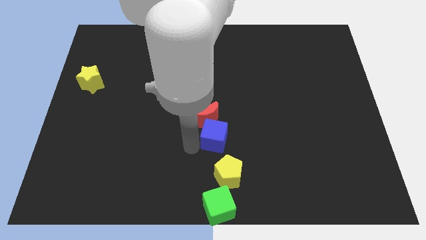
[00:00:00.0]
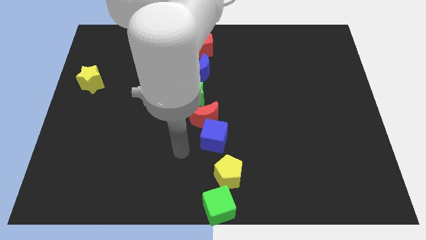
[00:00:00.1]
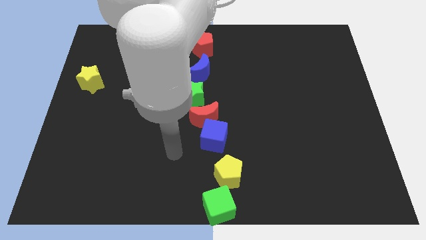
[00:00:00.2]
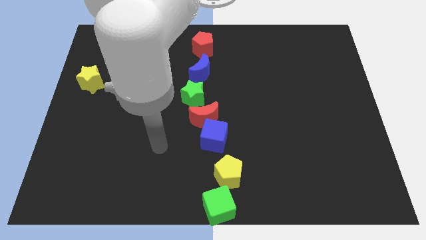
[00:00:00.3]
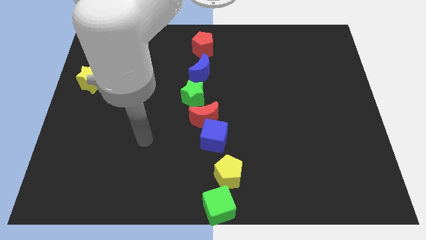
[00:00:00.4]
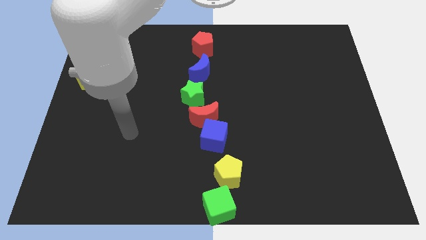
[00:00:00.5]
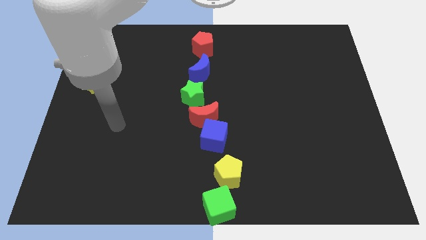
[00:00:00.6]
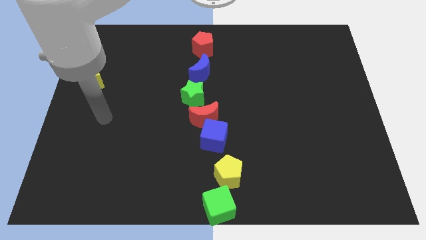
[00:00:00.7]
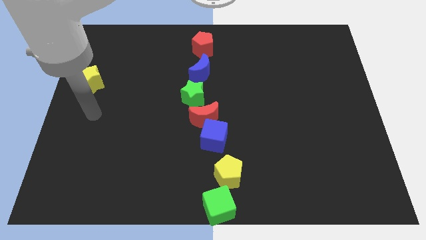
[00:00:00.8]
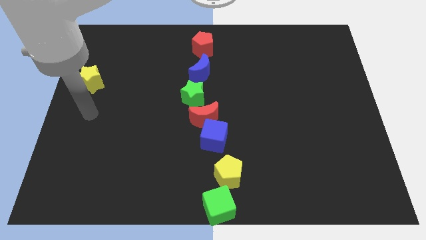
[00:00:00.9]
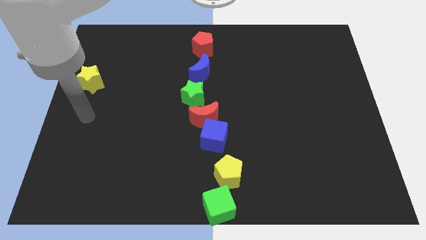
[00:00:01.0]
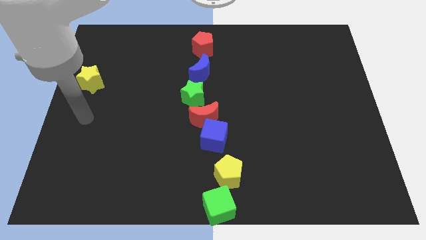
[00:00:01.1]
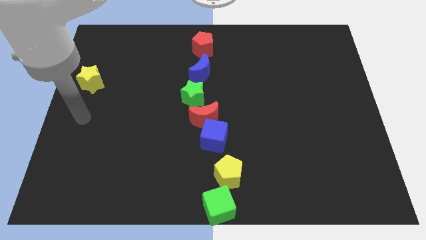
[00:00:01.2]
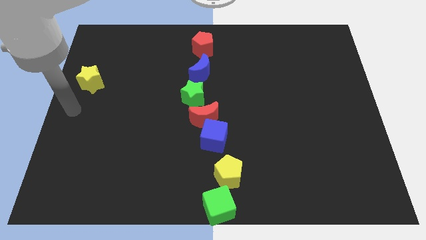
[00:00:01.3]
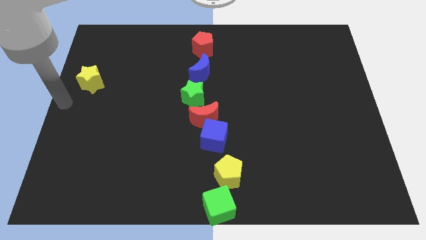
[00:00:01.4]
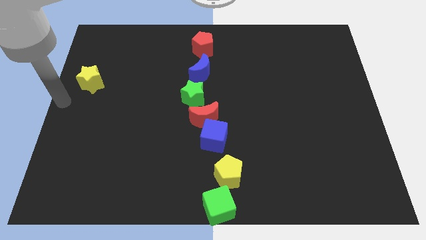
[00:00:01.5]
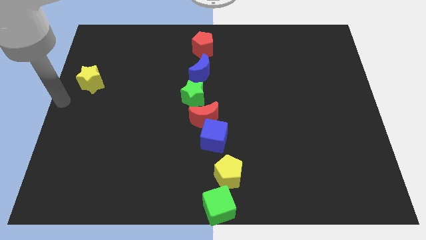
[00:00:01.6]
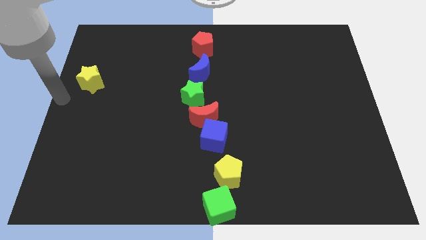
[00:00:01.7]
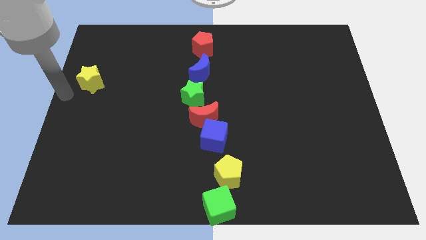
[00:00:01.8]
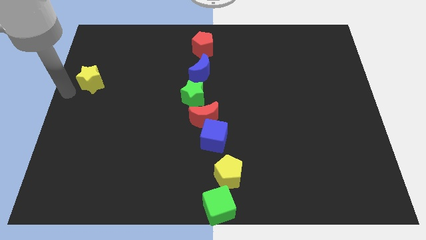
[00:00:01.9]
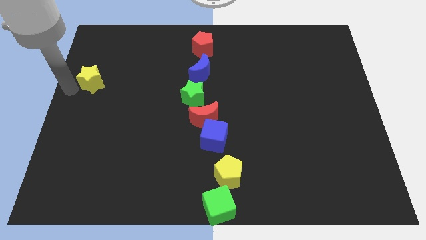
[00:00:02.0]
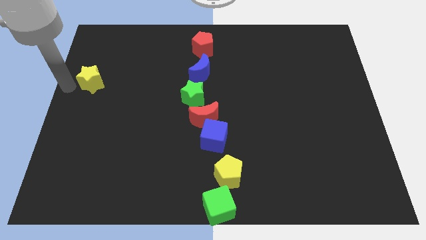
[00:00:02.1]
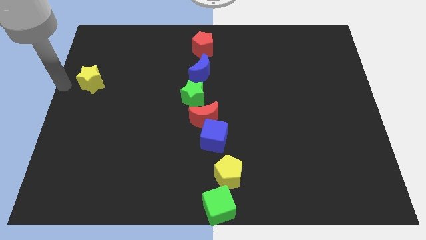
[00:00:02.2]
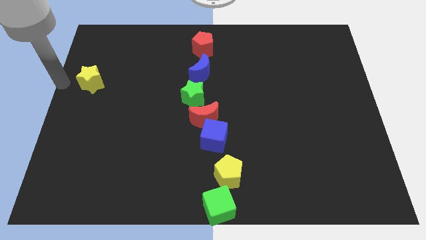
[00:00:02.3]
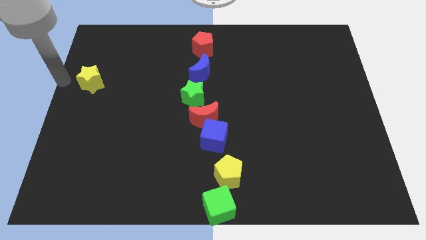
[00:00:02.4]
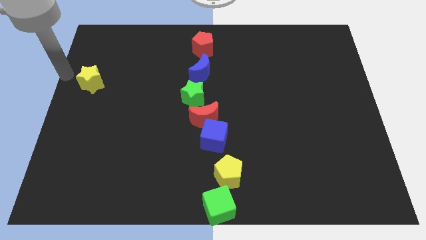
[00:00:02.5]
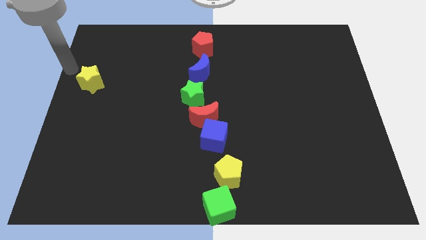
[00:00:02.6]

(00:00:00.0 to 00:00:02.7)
move your arm to the left of yellow star

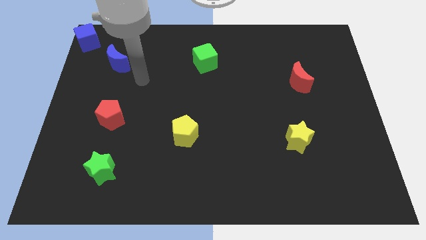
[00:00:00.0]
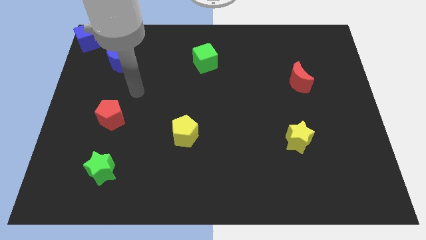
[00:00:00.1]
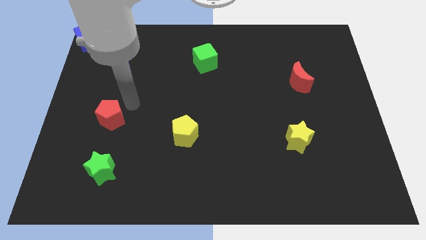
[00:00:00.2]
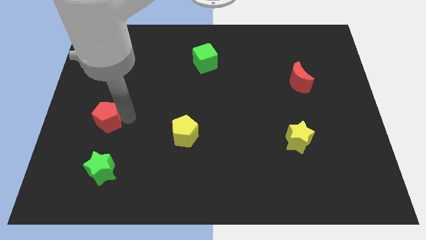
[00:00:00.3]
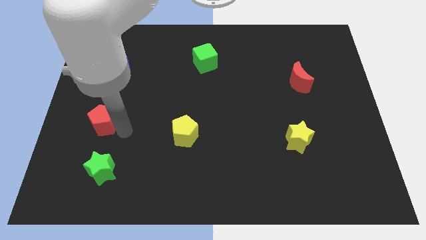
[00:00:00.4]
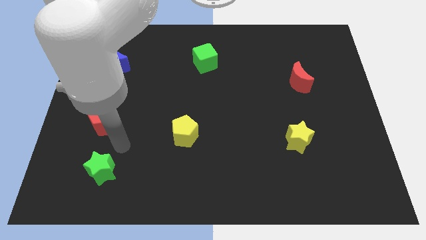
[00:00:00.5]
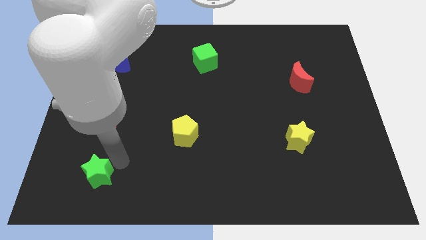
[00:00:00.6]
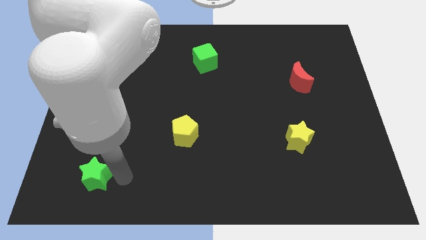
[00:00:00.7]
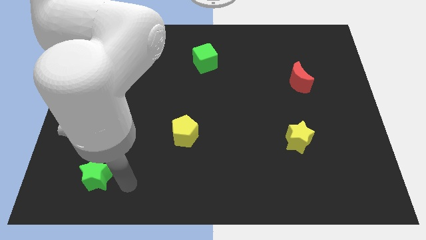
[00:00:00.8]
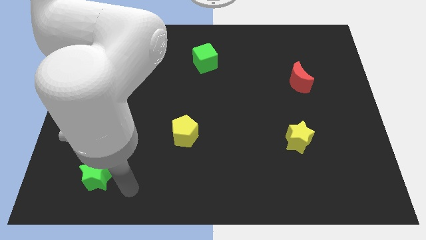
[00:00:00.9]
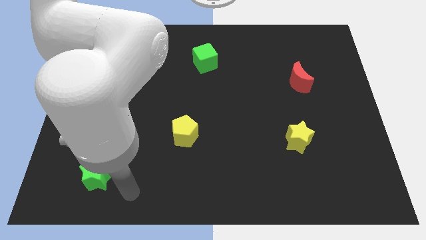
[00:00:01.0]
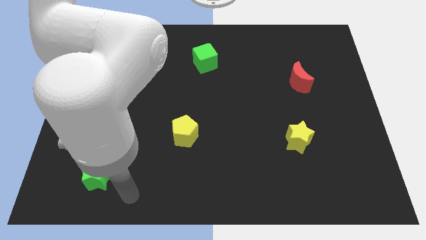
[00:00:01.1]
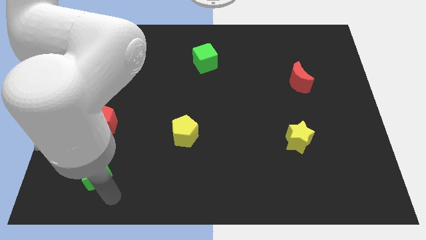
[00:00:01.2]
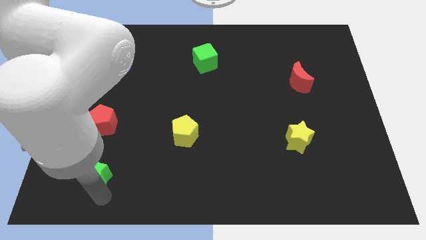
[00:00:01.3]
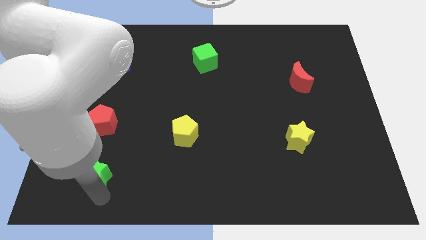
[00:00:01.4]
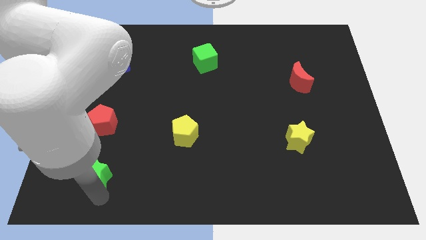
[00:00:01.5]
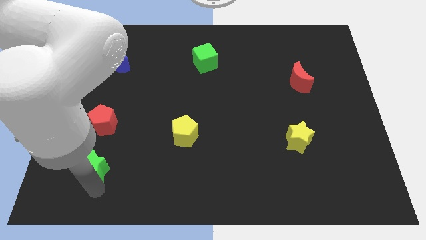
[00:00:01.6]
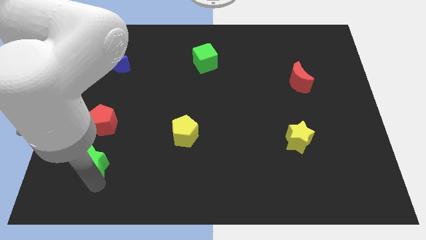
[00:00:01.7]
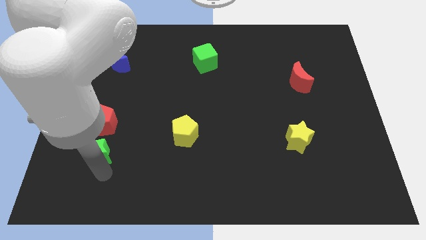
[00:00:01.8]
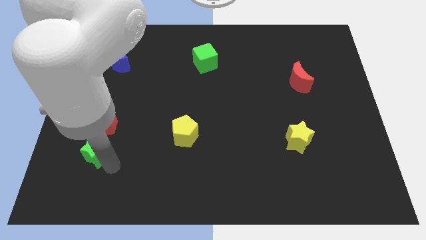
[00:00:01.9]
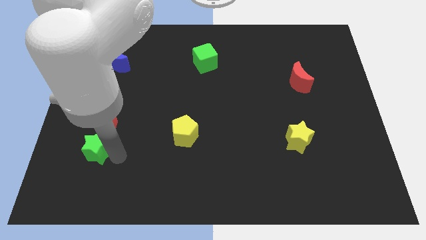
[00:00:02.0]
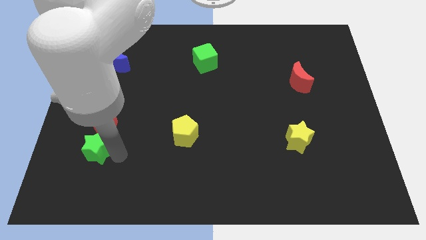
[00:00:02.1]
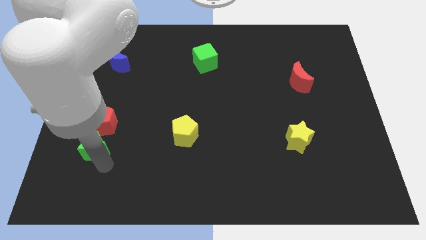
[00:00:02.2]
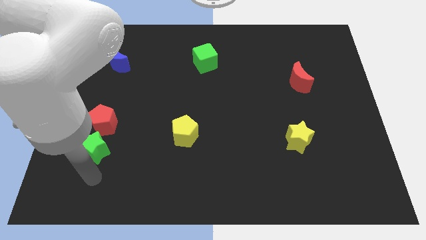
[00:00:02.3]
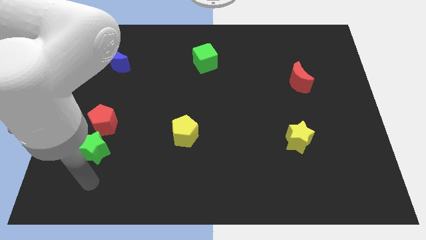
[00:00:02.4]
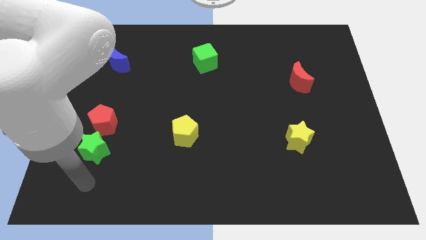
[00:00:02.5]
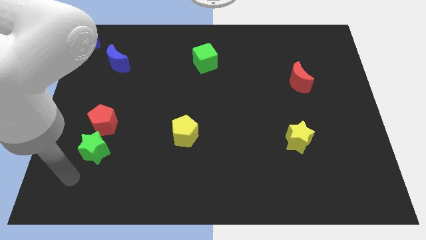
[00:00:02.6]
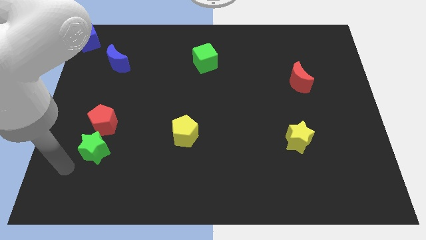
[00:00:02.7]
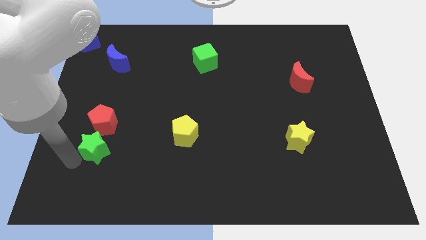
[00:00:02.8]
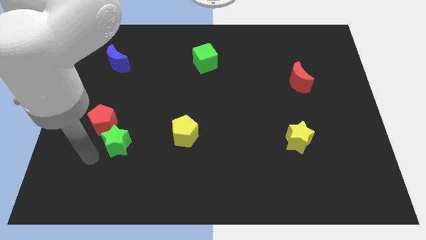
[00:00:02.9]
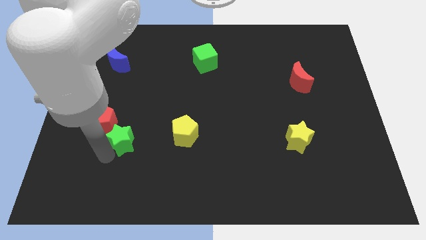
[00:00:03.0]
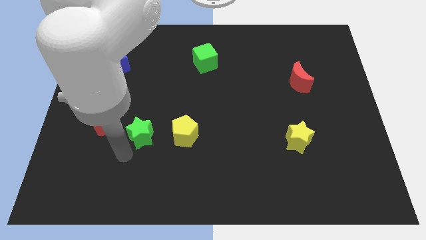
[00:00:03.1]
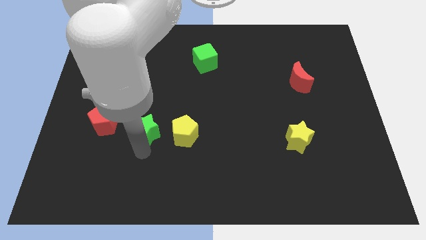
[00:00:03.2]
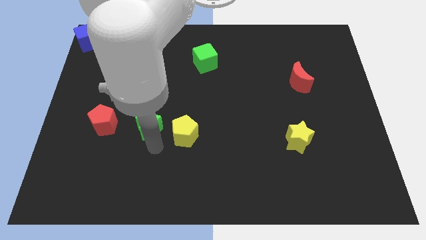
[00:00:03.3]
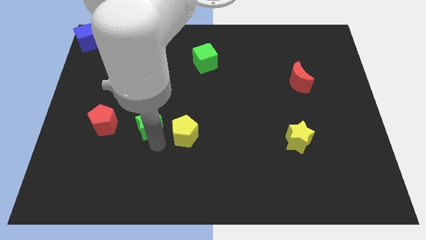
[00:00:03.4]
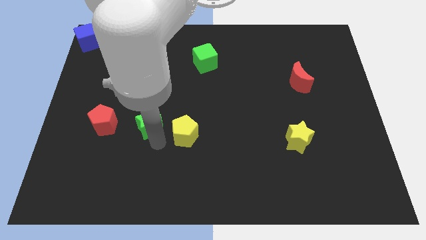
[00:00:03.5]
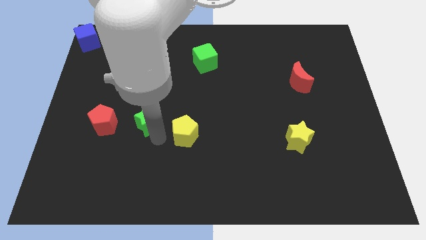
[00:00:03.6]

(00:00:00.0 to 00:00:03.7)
put the green star between red pentagon and yellow pentagon

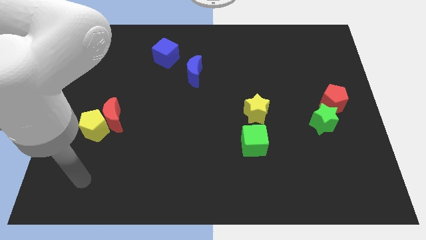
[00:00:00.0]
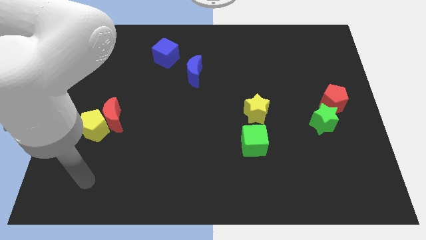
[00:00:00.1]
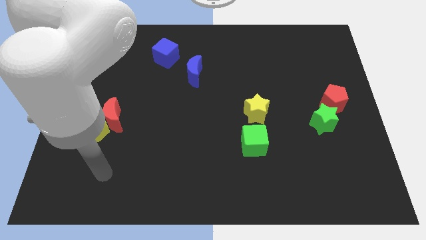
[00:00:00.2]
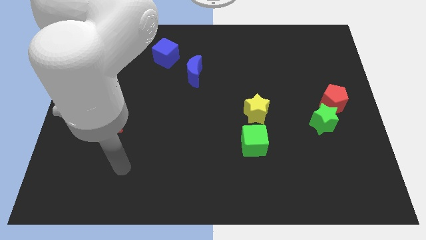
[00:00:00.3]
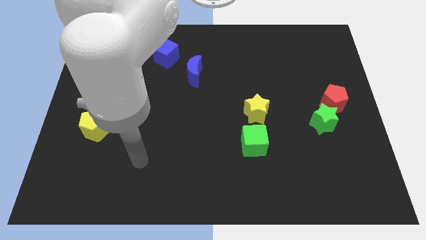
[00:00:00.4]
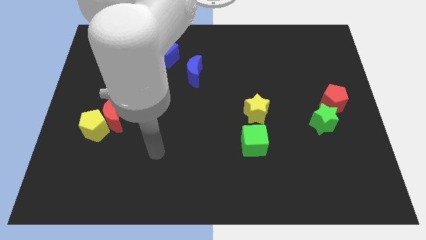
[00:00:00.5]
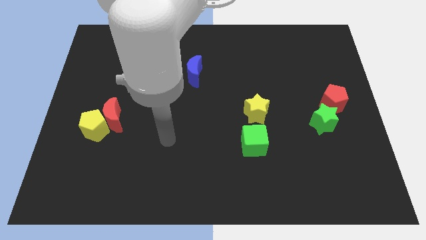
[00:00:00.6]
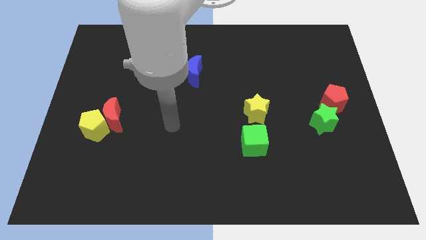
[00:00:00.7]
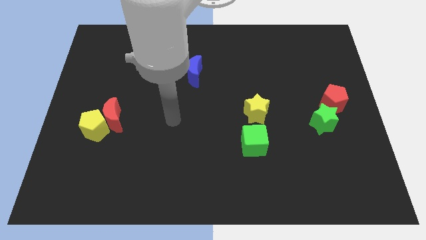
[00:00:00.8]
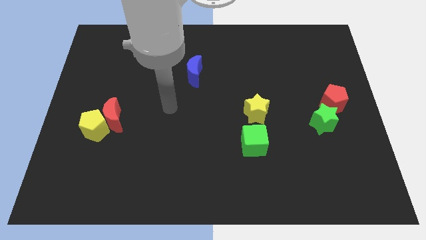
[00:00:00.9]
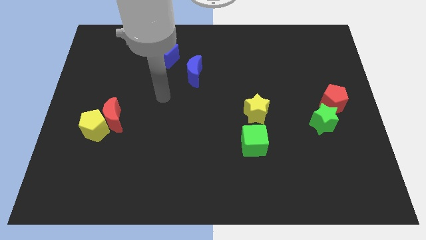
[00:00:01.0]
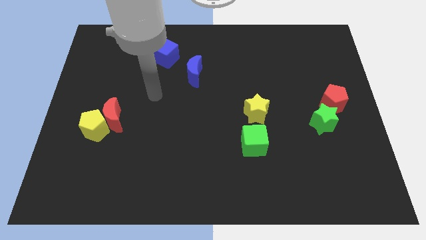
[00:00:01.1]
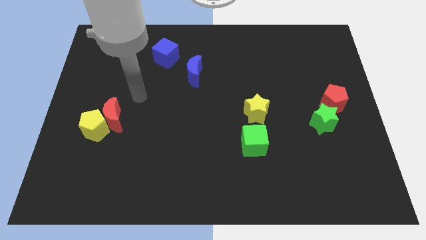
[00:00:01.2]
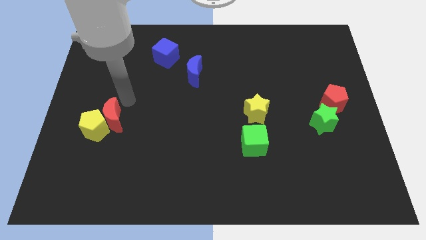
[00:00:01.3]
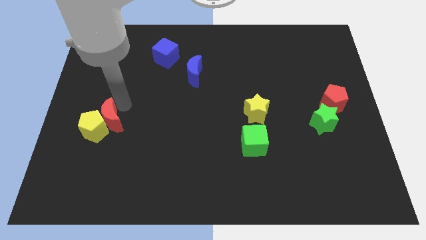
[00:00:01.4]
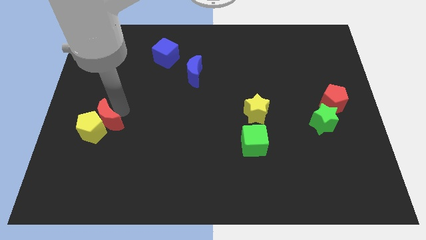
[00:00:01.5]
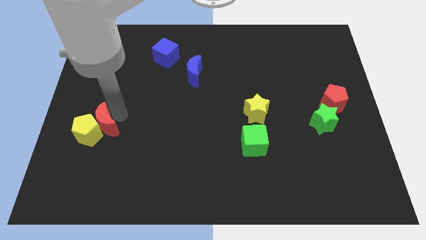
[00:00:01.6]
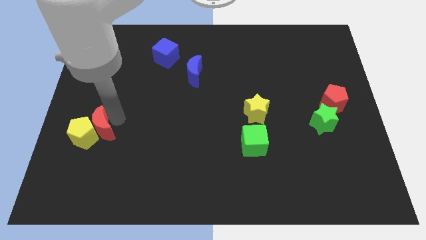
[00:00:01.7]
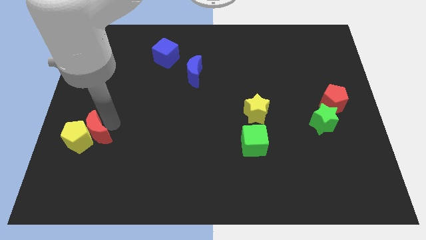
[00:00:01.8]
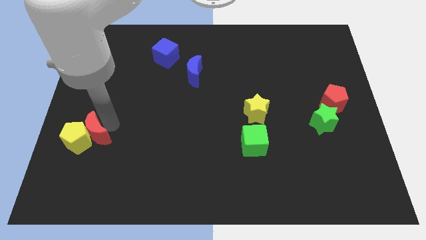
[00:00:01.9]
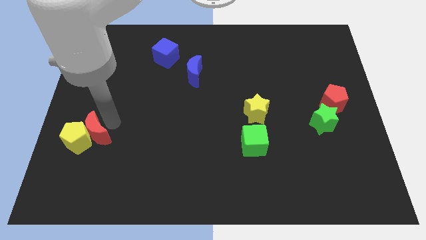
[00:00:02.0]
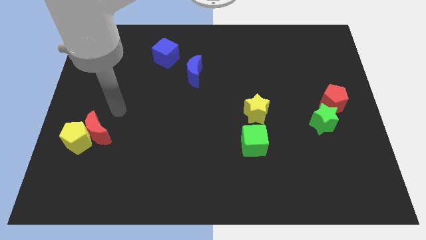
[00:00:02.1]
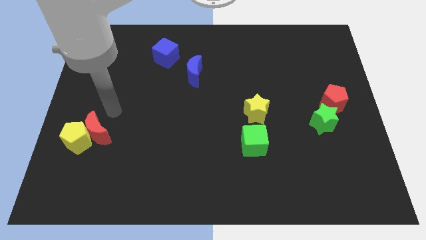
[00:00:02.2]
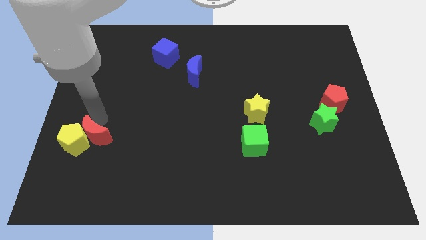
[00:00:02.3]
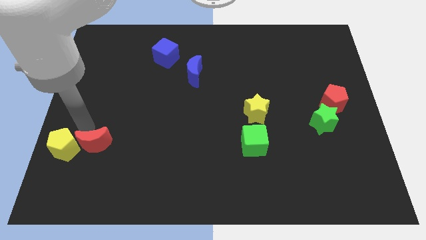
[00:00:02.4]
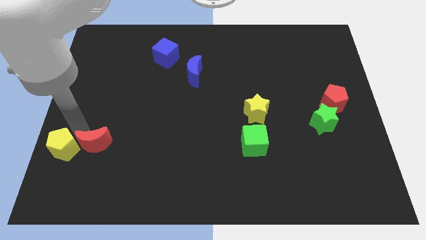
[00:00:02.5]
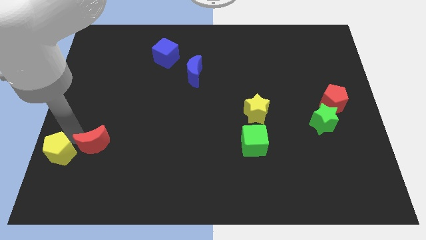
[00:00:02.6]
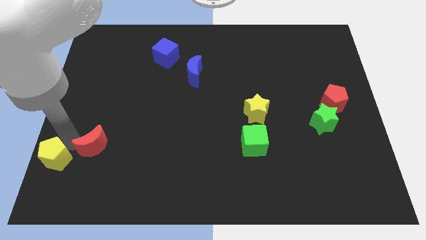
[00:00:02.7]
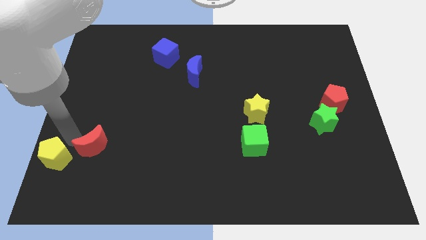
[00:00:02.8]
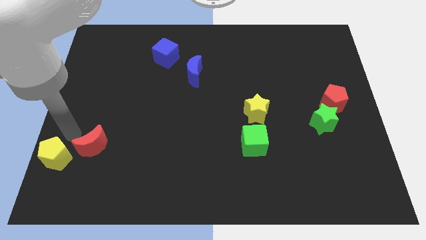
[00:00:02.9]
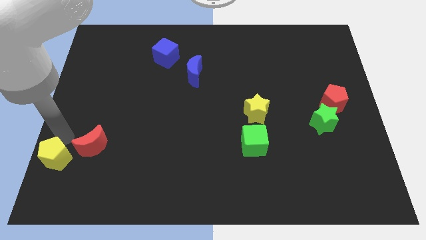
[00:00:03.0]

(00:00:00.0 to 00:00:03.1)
separate the yellow pentagon from the red crescent
